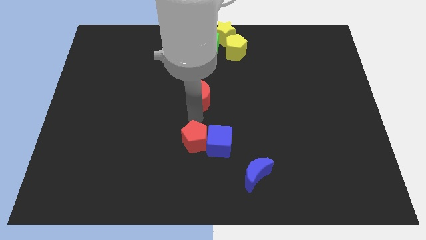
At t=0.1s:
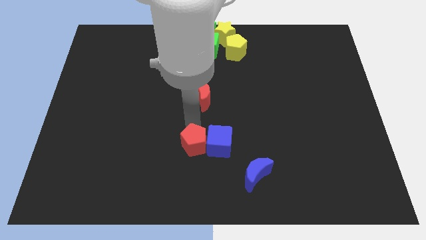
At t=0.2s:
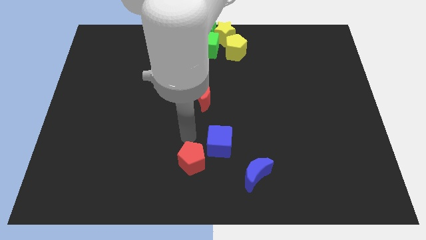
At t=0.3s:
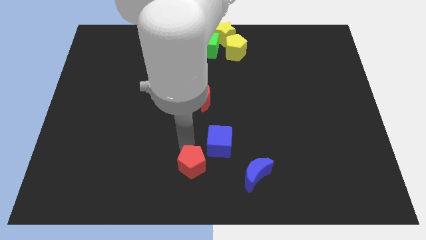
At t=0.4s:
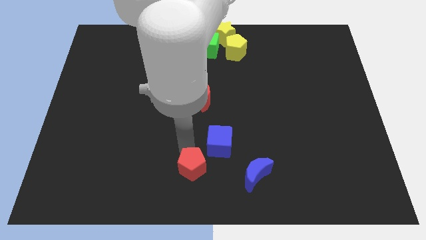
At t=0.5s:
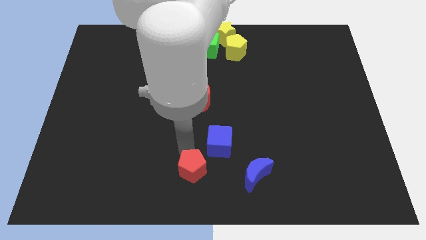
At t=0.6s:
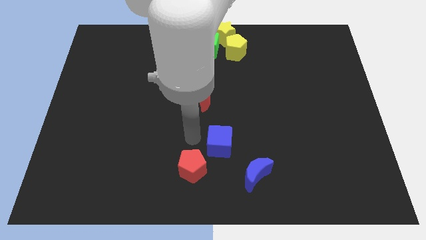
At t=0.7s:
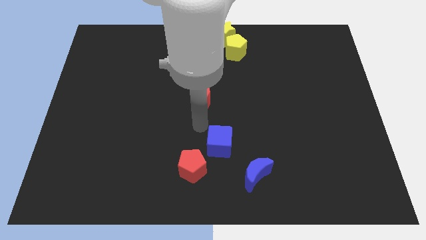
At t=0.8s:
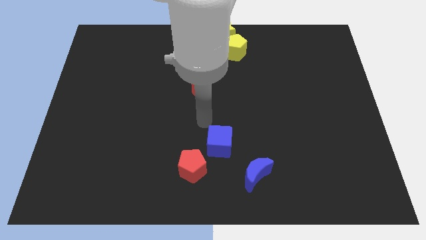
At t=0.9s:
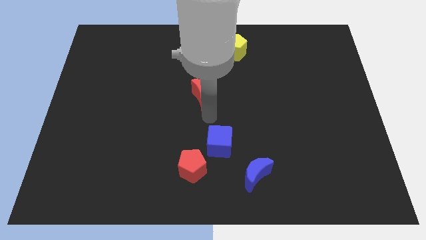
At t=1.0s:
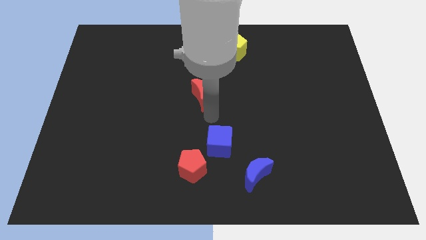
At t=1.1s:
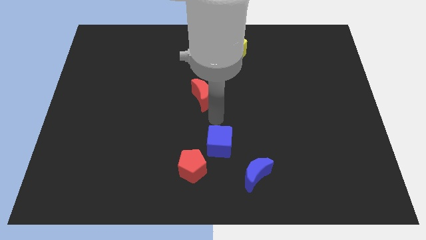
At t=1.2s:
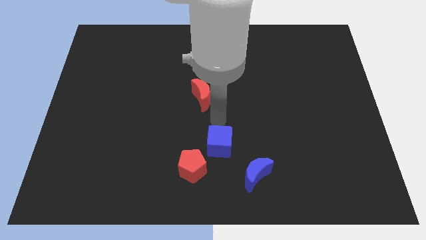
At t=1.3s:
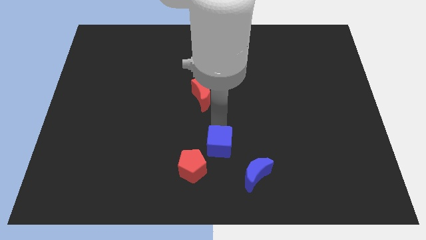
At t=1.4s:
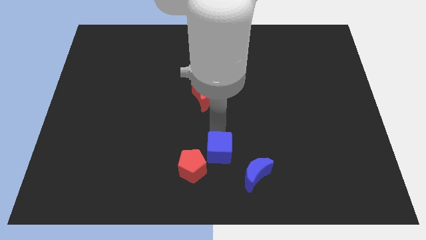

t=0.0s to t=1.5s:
slightly move down the red pentagon

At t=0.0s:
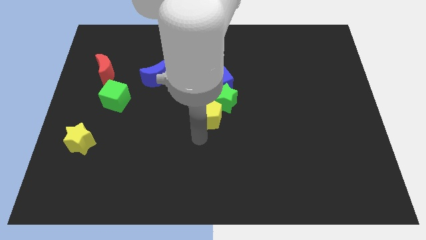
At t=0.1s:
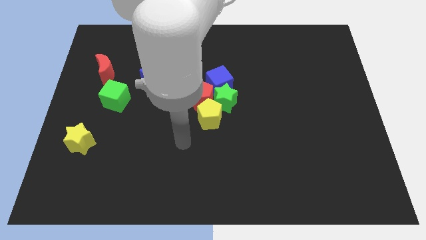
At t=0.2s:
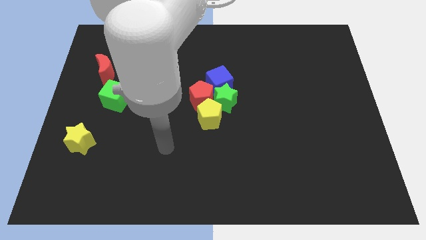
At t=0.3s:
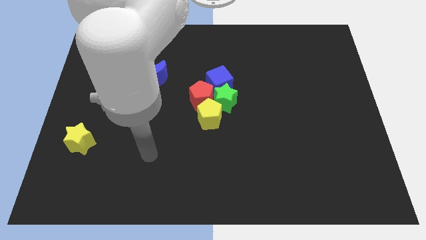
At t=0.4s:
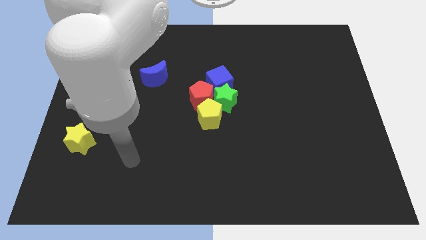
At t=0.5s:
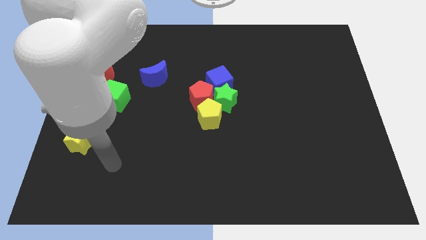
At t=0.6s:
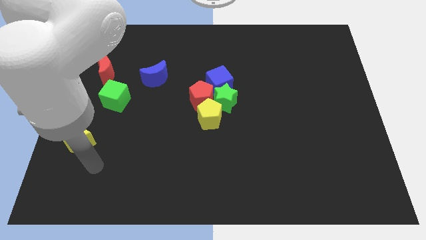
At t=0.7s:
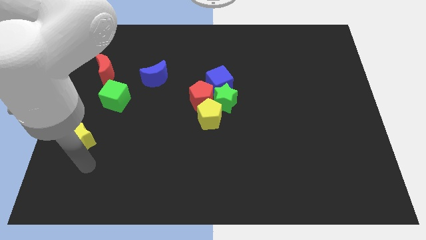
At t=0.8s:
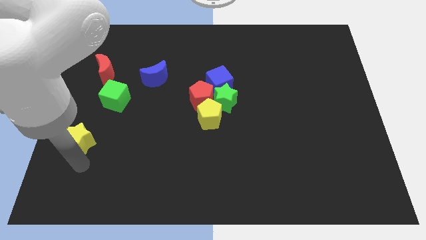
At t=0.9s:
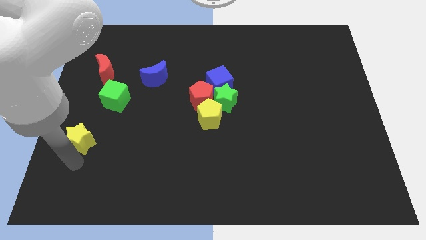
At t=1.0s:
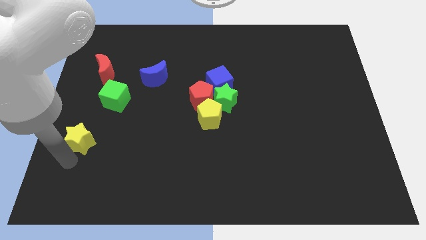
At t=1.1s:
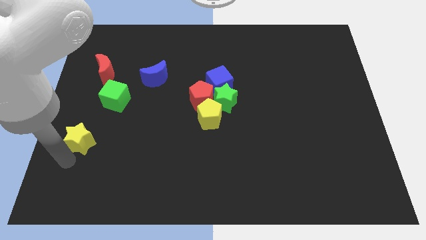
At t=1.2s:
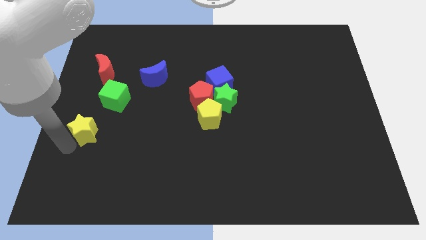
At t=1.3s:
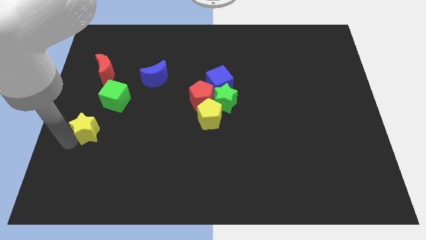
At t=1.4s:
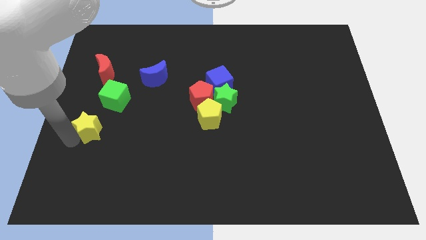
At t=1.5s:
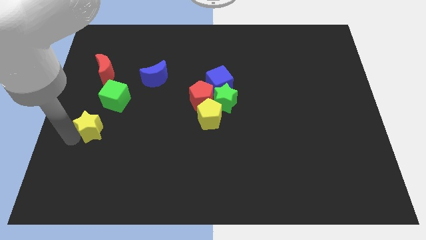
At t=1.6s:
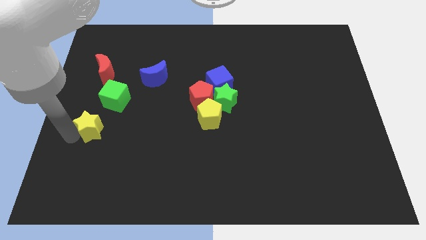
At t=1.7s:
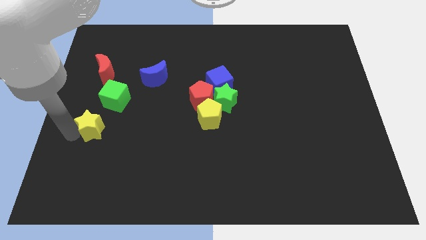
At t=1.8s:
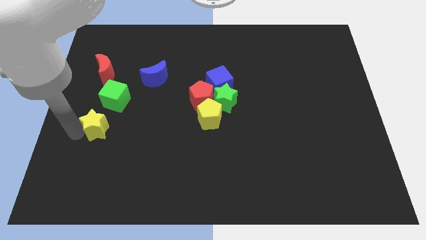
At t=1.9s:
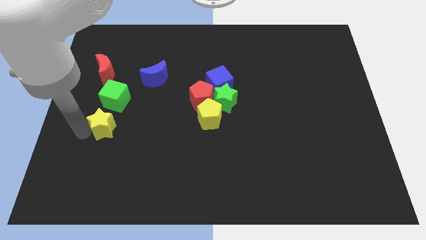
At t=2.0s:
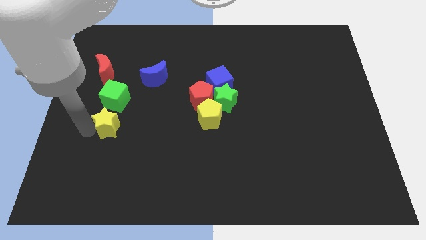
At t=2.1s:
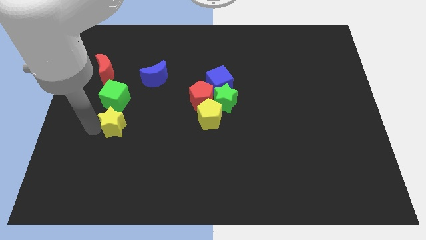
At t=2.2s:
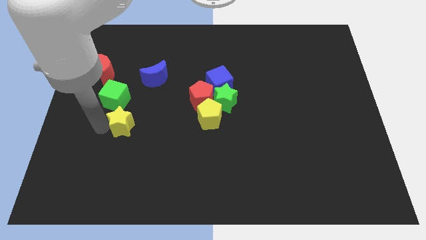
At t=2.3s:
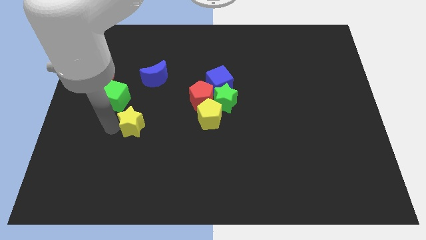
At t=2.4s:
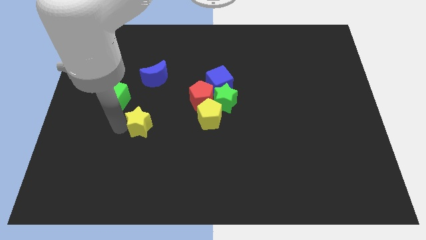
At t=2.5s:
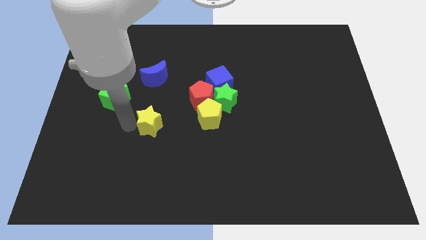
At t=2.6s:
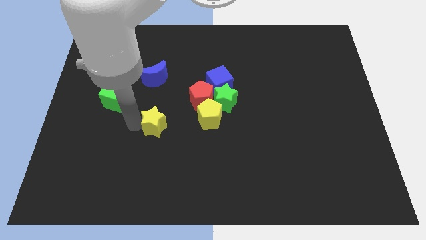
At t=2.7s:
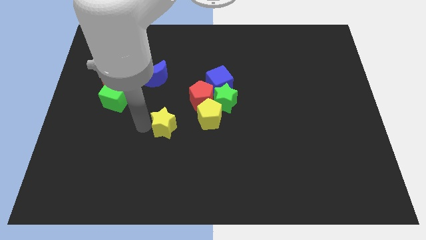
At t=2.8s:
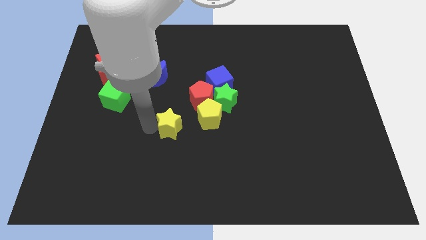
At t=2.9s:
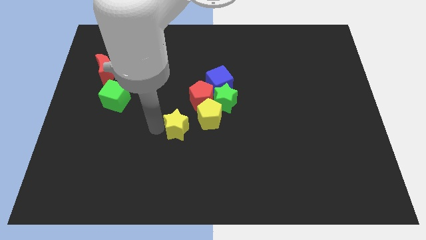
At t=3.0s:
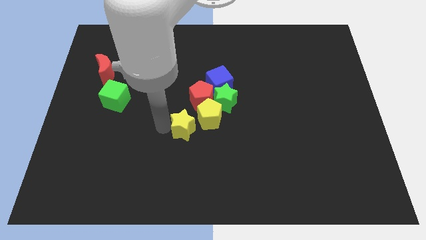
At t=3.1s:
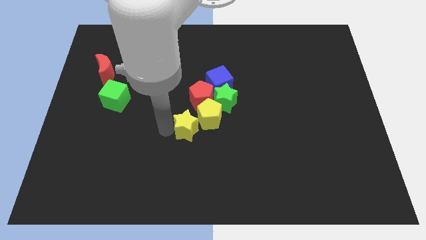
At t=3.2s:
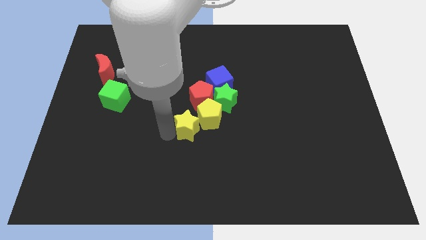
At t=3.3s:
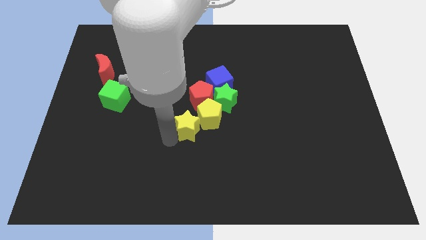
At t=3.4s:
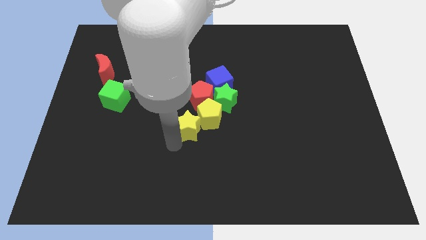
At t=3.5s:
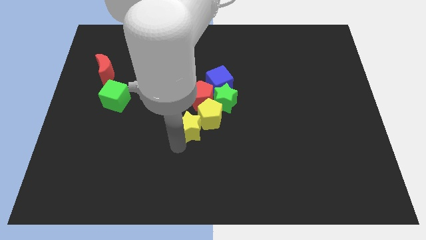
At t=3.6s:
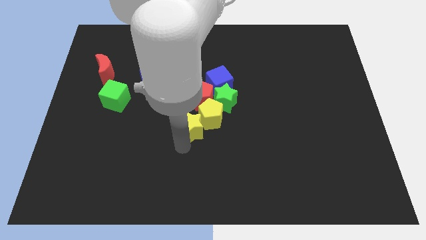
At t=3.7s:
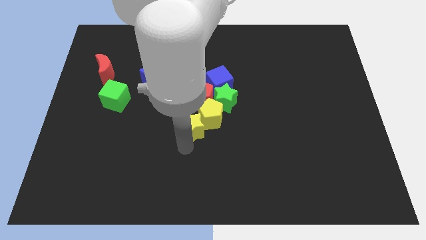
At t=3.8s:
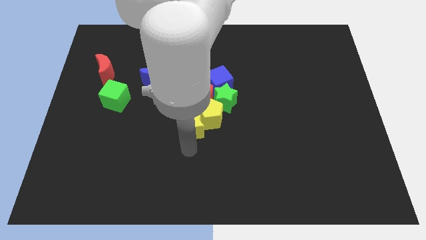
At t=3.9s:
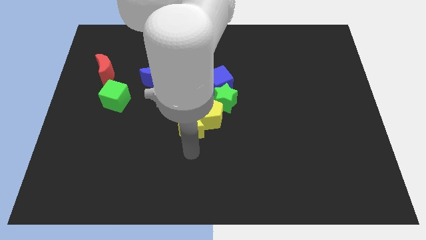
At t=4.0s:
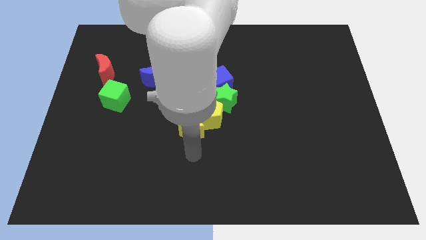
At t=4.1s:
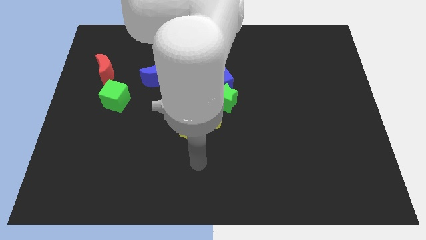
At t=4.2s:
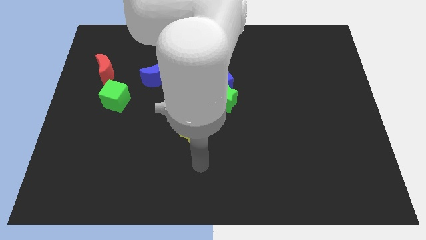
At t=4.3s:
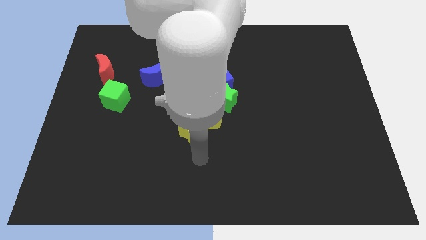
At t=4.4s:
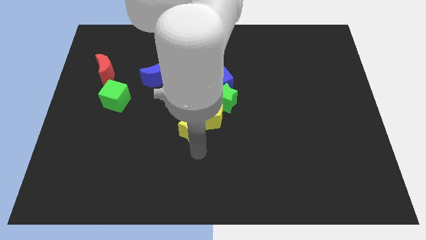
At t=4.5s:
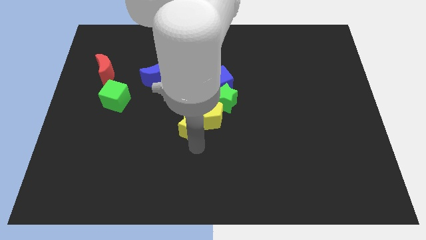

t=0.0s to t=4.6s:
move the yellow star into the yellow pentagon

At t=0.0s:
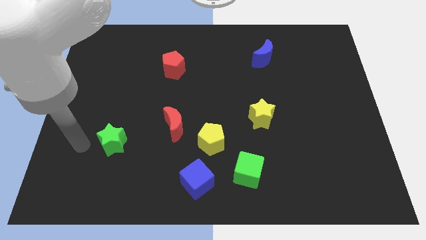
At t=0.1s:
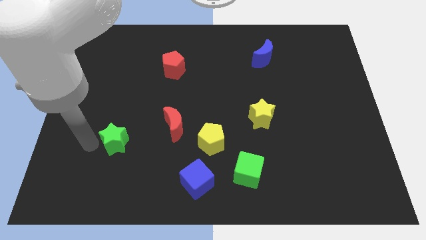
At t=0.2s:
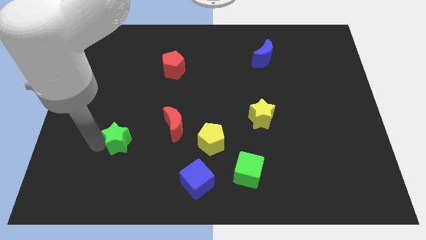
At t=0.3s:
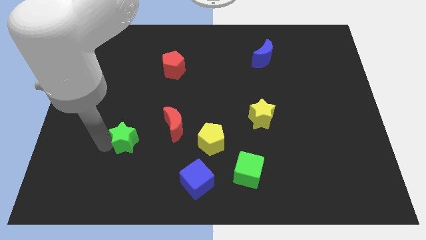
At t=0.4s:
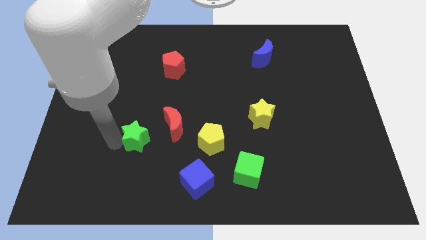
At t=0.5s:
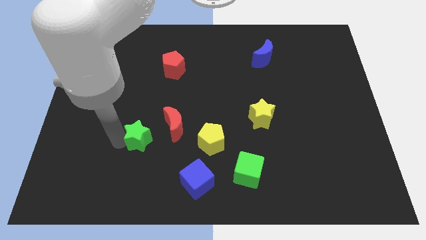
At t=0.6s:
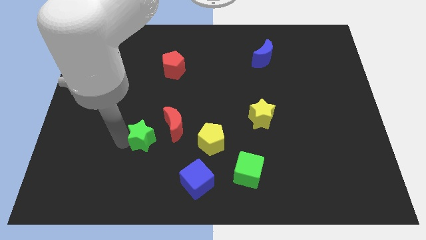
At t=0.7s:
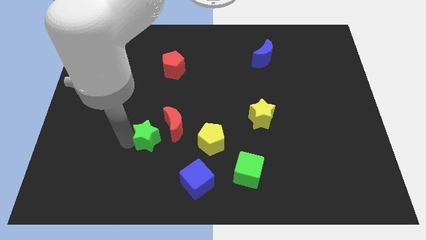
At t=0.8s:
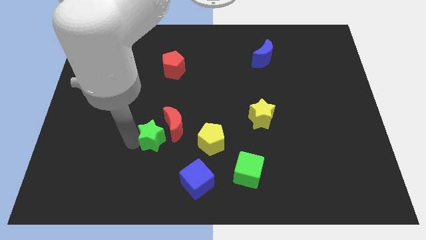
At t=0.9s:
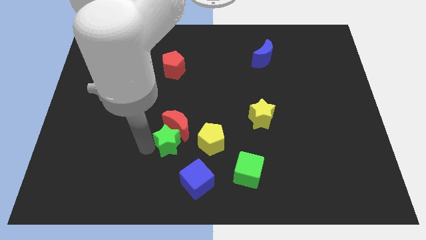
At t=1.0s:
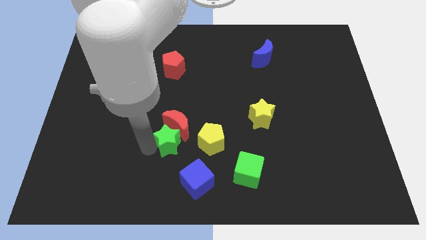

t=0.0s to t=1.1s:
push the green star into the red moon

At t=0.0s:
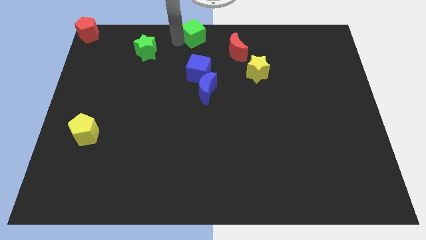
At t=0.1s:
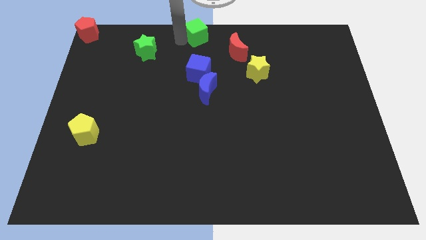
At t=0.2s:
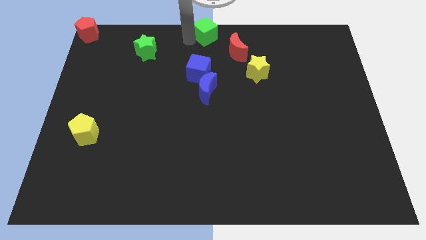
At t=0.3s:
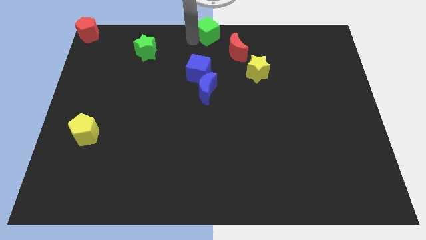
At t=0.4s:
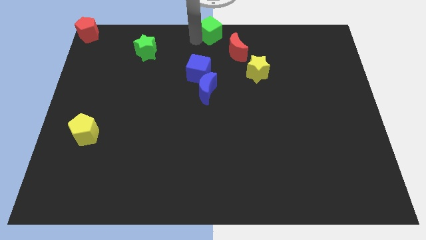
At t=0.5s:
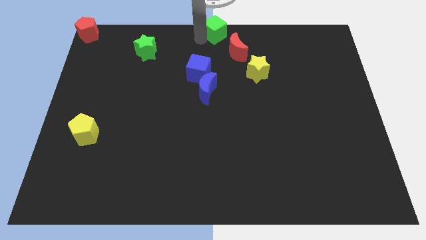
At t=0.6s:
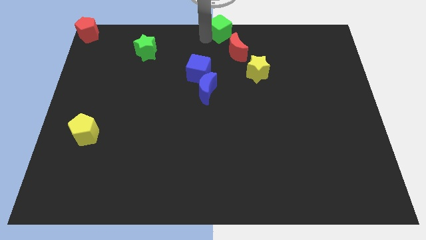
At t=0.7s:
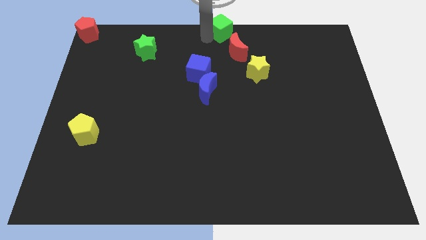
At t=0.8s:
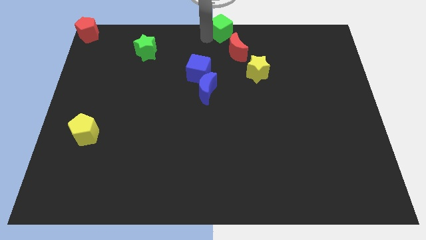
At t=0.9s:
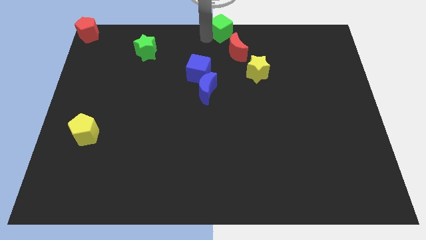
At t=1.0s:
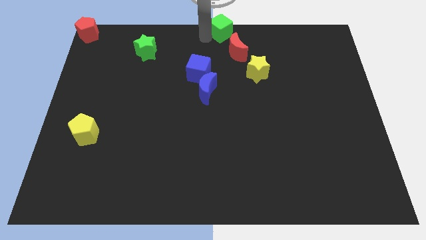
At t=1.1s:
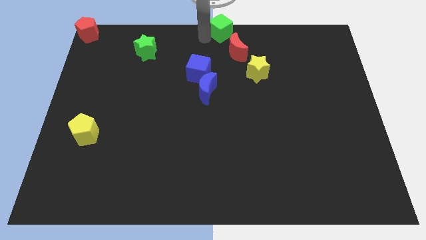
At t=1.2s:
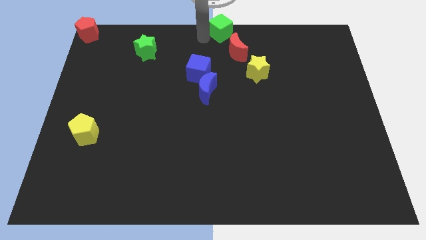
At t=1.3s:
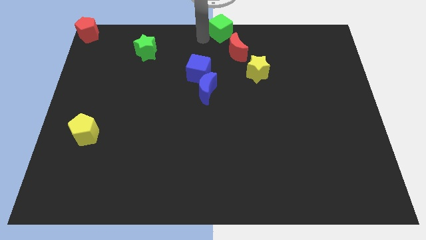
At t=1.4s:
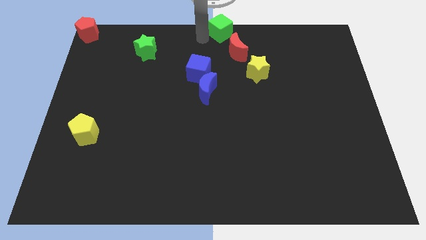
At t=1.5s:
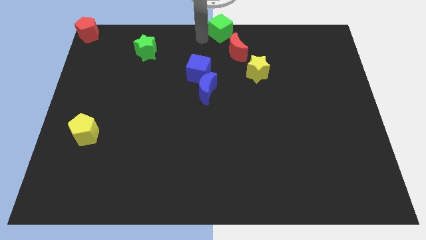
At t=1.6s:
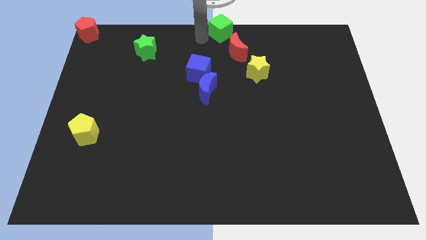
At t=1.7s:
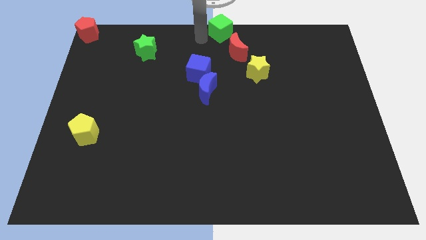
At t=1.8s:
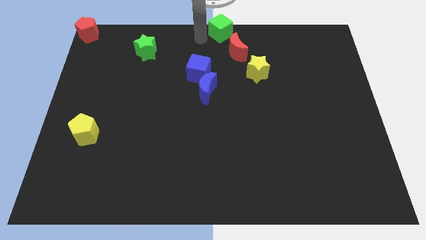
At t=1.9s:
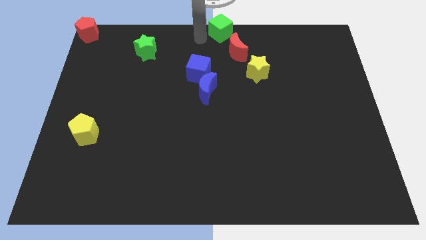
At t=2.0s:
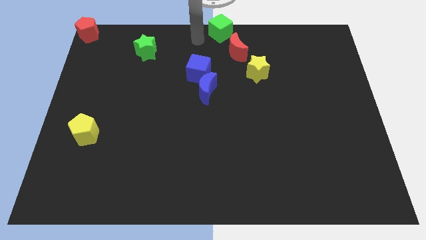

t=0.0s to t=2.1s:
move green cube towards the center of the top
